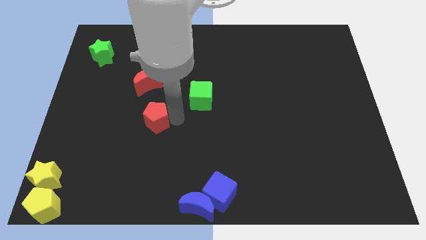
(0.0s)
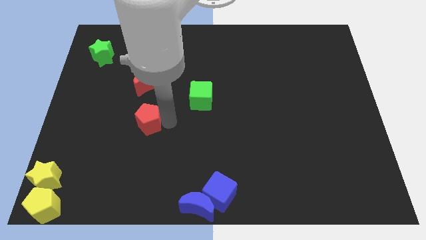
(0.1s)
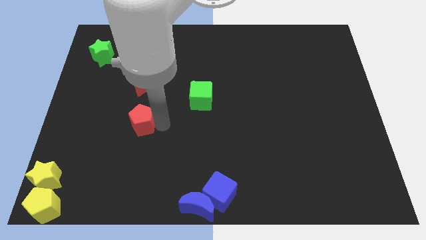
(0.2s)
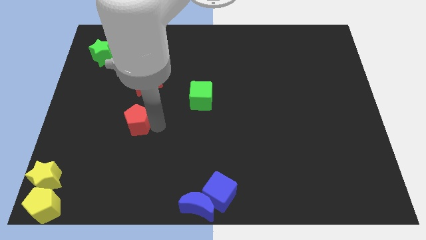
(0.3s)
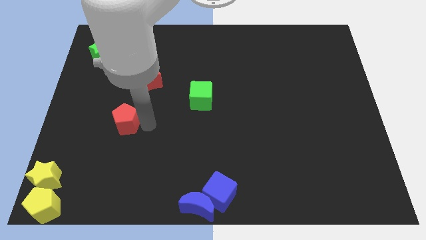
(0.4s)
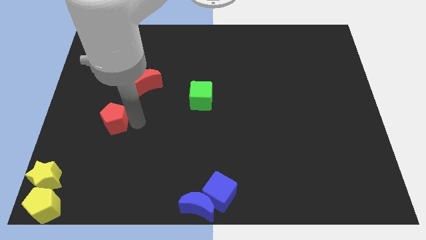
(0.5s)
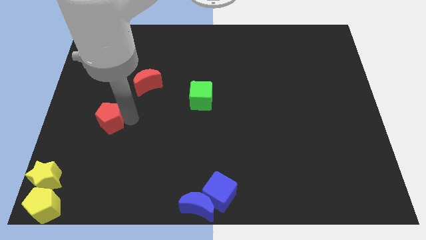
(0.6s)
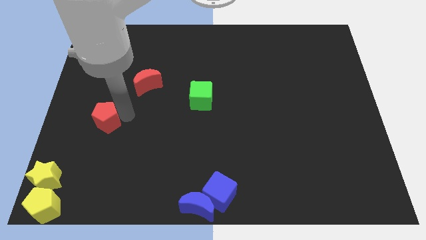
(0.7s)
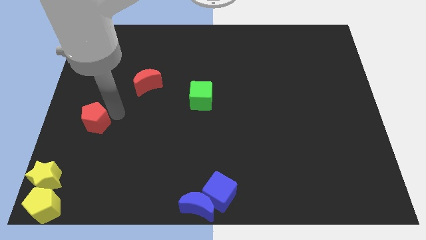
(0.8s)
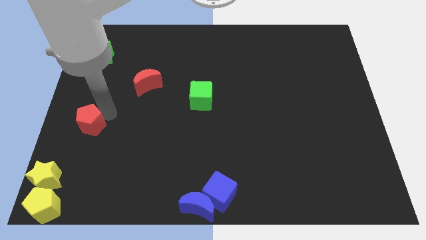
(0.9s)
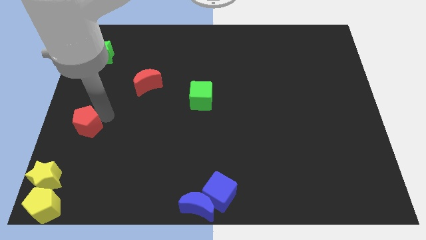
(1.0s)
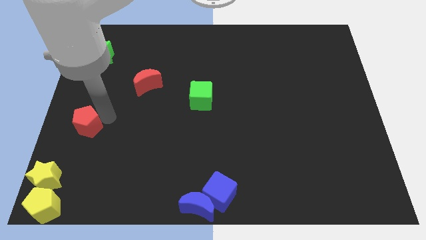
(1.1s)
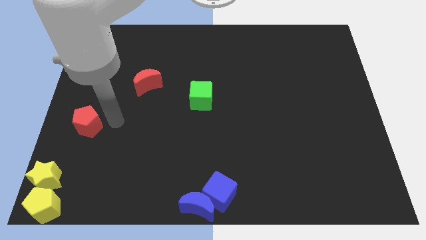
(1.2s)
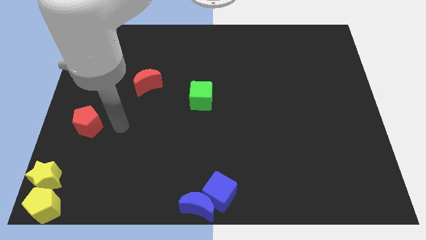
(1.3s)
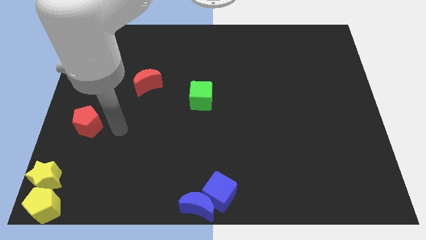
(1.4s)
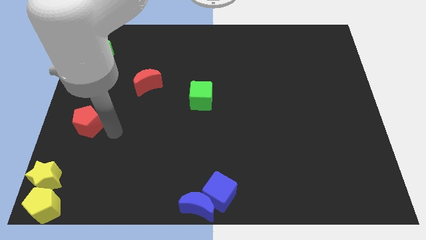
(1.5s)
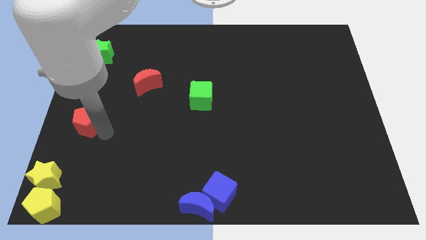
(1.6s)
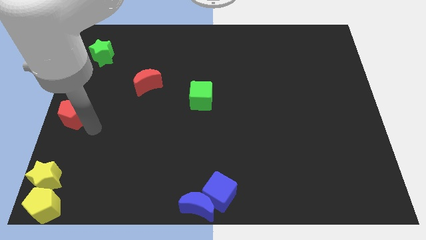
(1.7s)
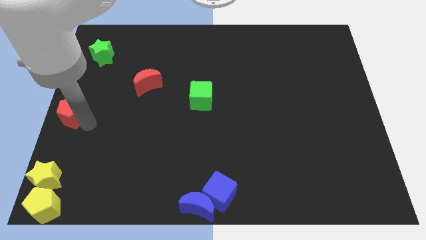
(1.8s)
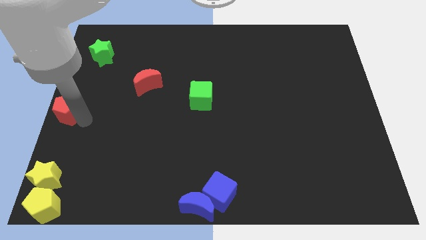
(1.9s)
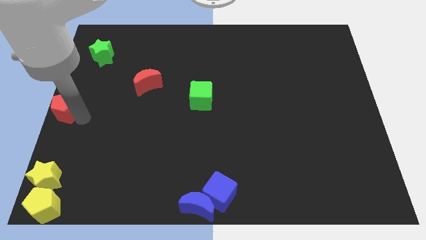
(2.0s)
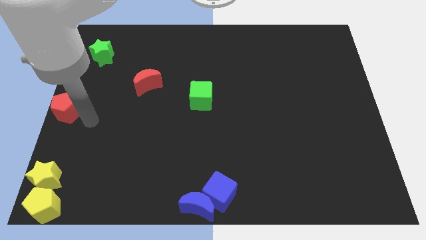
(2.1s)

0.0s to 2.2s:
move the red pentagon to the center left of the board

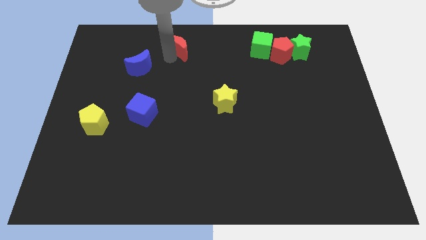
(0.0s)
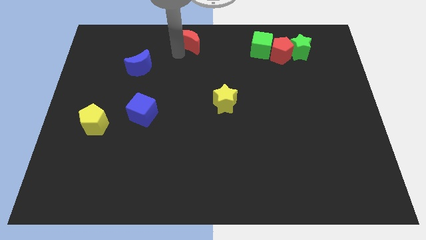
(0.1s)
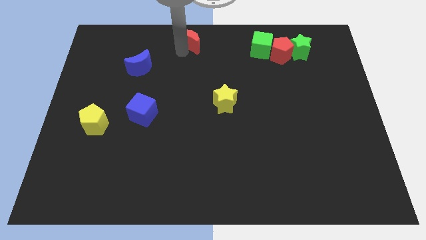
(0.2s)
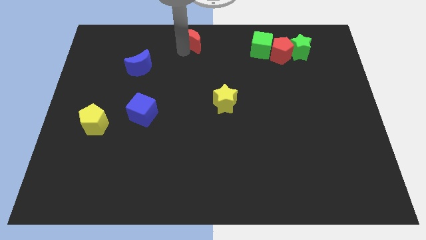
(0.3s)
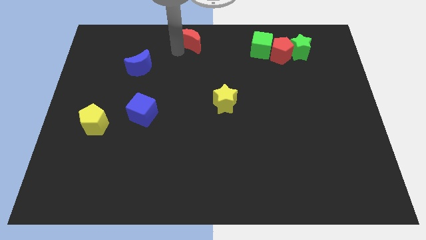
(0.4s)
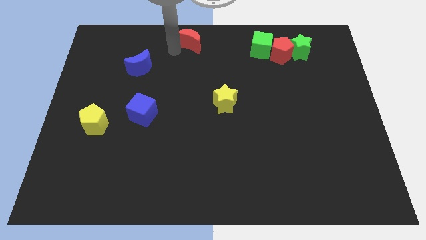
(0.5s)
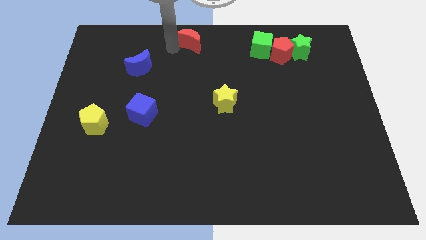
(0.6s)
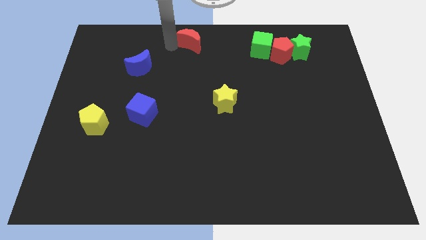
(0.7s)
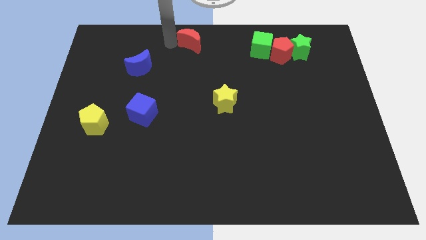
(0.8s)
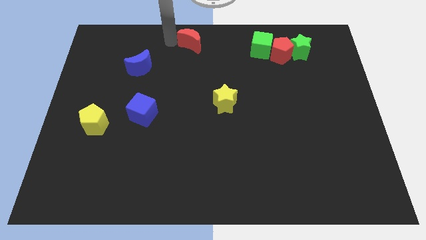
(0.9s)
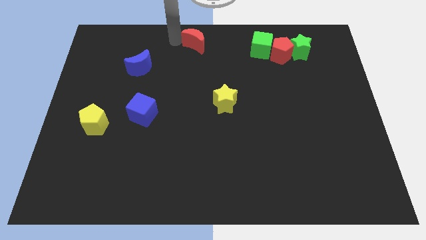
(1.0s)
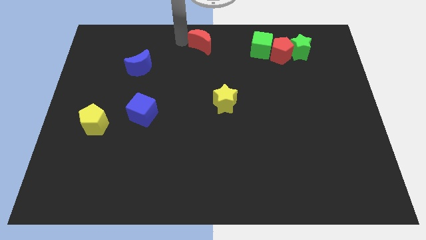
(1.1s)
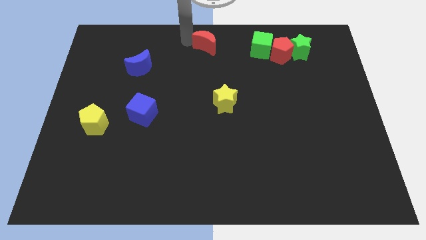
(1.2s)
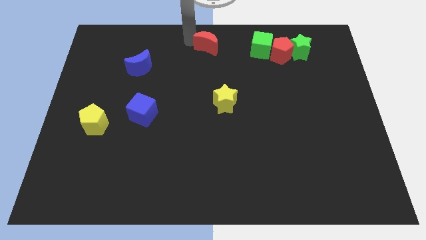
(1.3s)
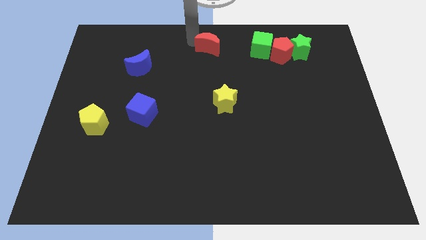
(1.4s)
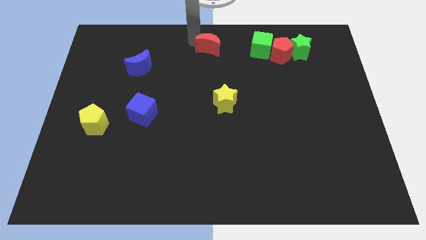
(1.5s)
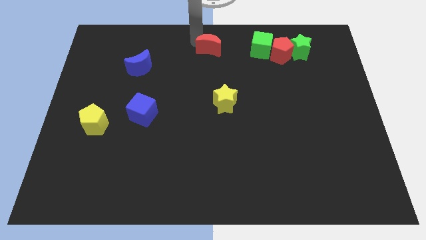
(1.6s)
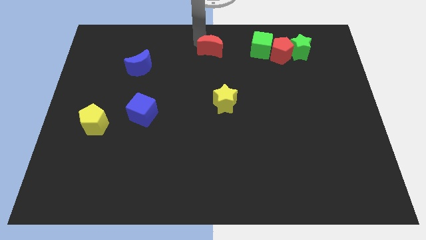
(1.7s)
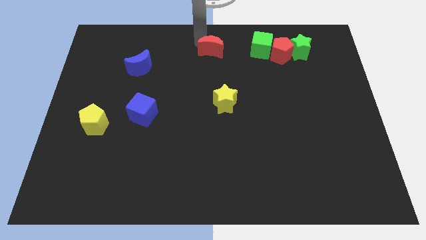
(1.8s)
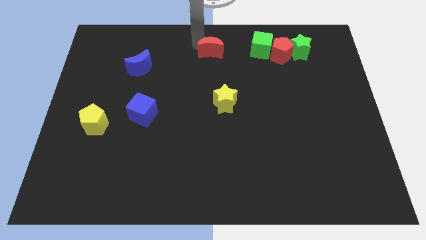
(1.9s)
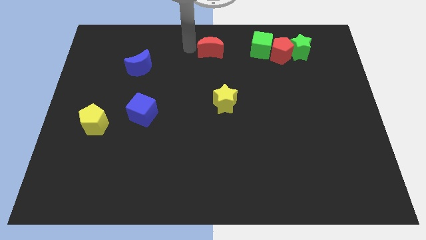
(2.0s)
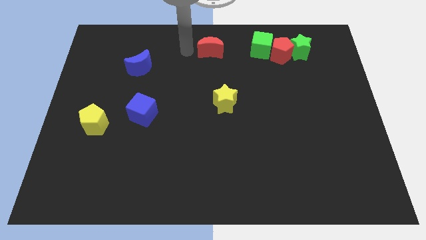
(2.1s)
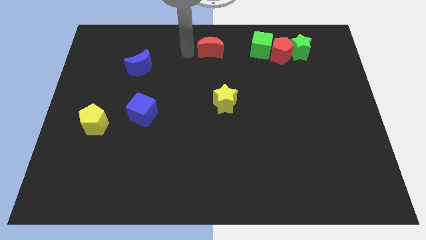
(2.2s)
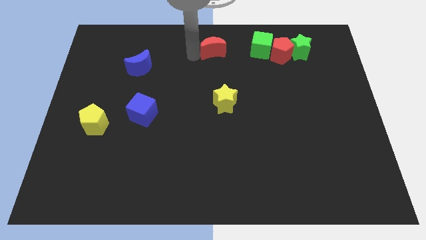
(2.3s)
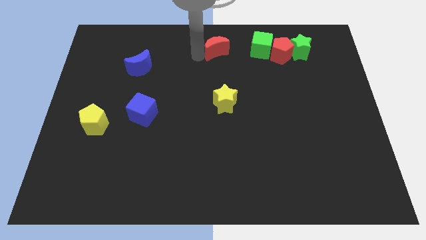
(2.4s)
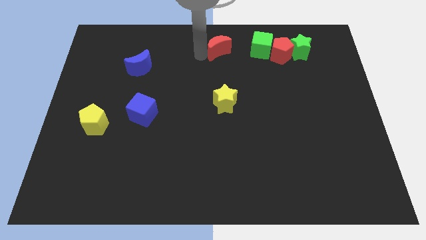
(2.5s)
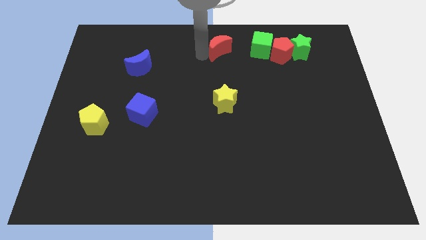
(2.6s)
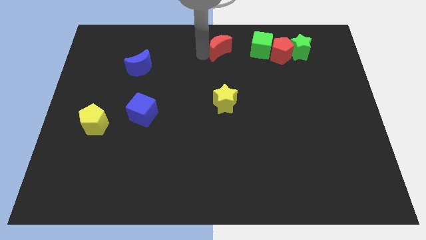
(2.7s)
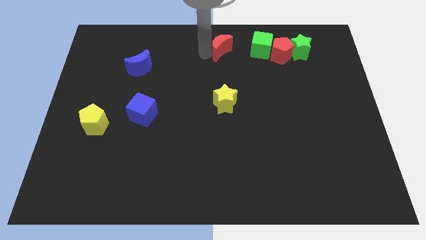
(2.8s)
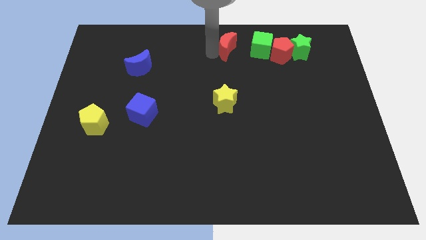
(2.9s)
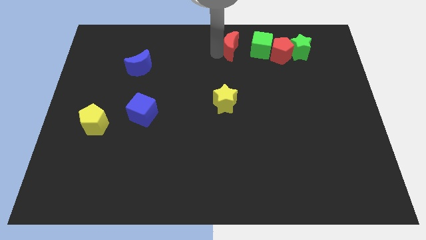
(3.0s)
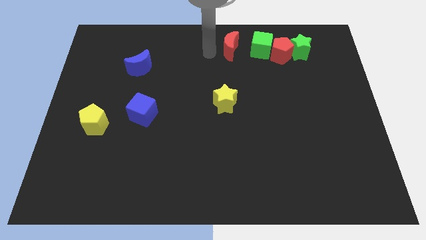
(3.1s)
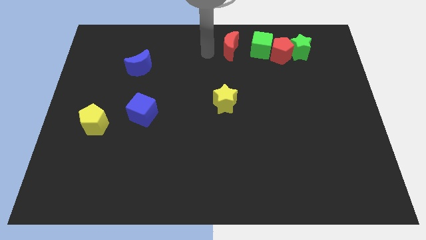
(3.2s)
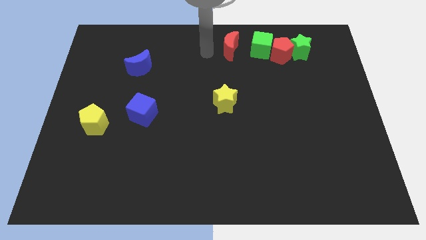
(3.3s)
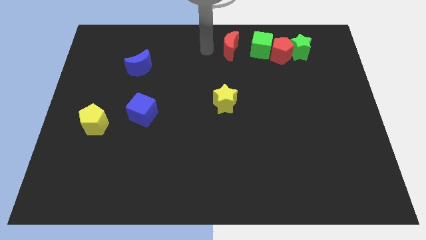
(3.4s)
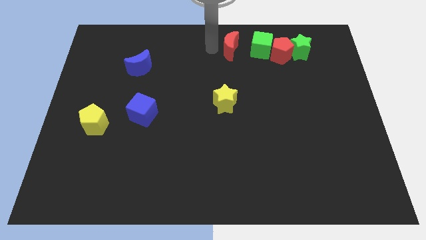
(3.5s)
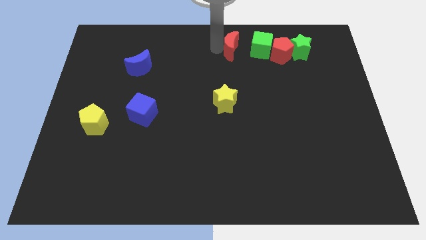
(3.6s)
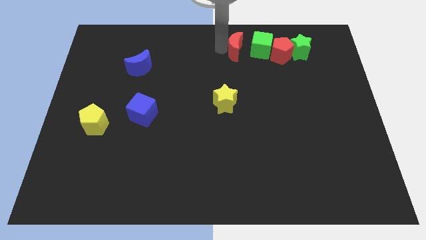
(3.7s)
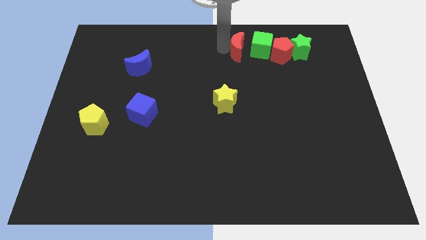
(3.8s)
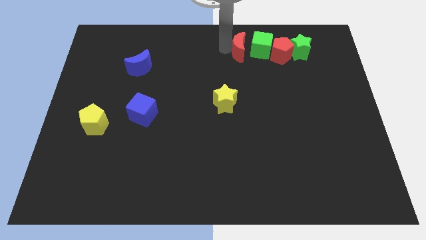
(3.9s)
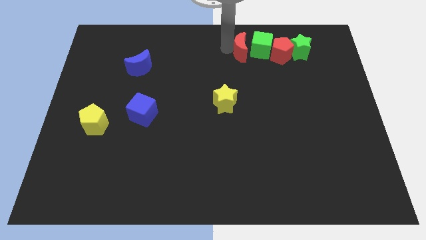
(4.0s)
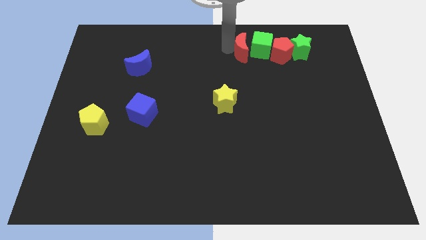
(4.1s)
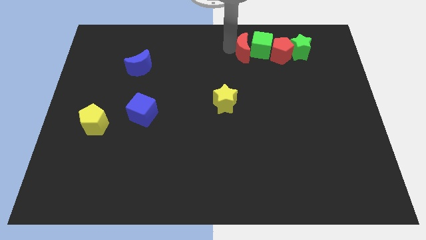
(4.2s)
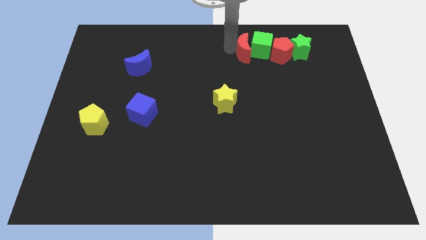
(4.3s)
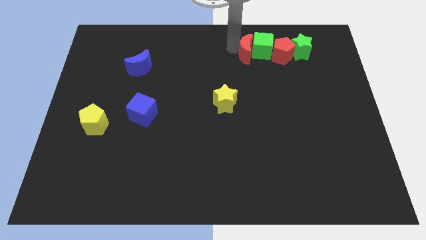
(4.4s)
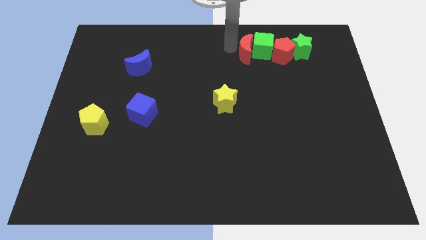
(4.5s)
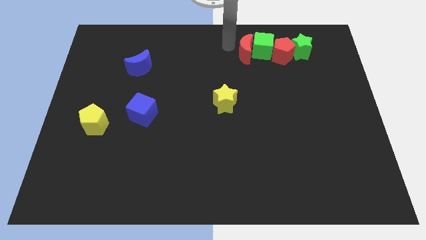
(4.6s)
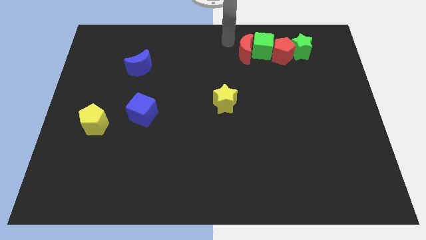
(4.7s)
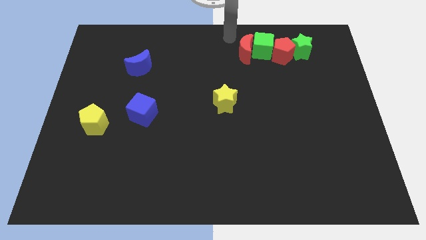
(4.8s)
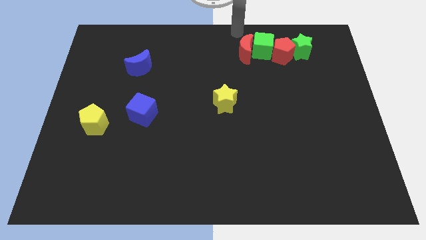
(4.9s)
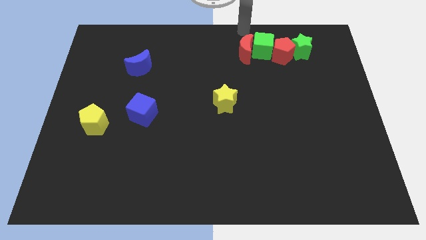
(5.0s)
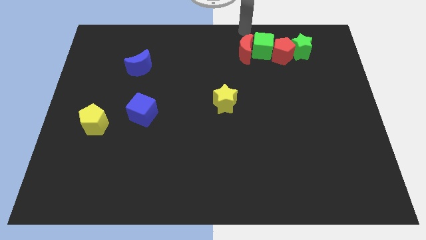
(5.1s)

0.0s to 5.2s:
push the red moon left to the green cube

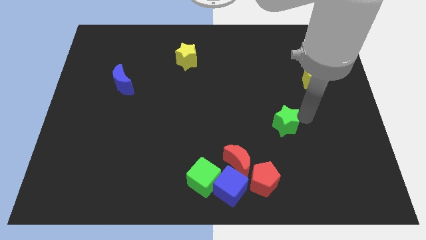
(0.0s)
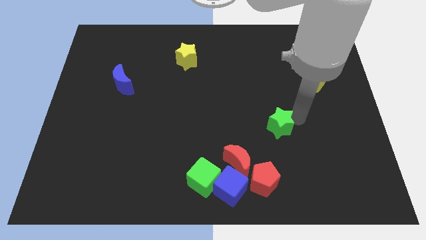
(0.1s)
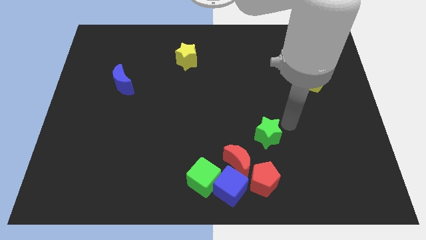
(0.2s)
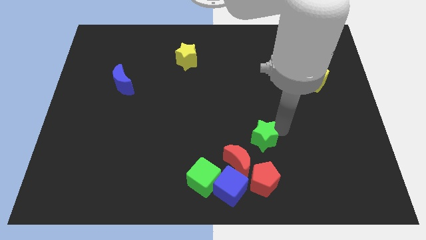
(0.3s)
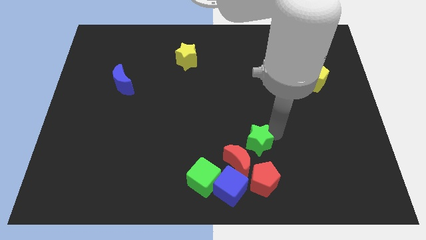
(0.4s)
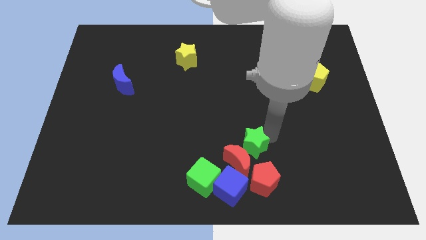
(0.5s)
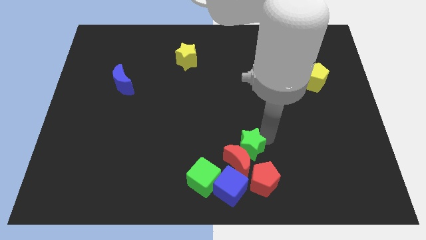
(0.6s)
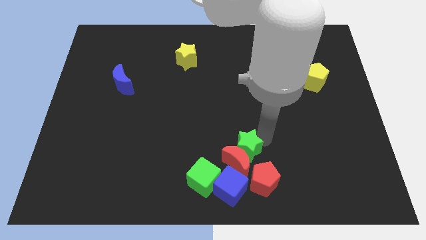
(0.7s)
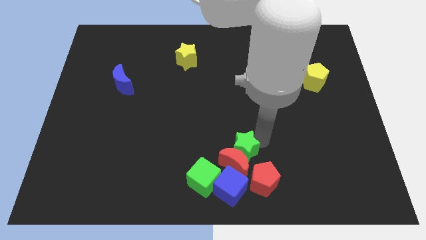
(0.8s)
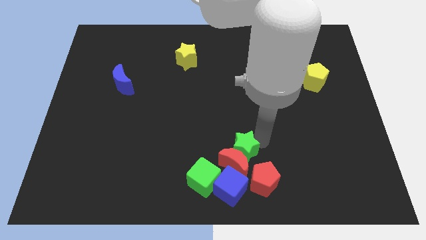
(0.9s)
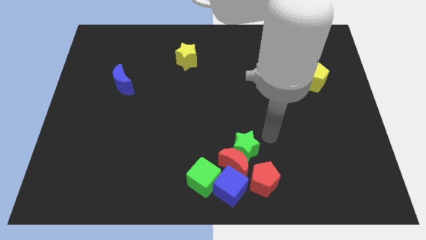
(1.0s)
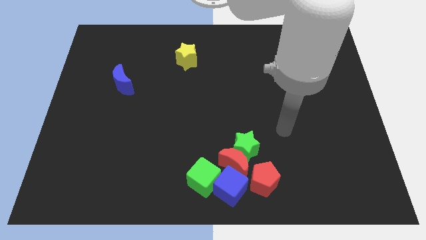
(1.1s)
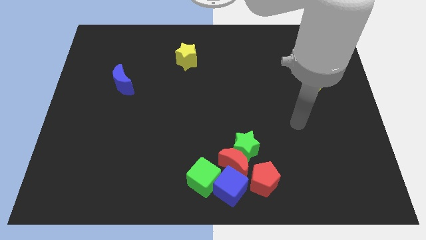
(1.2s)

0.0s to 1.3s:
push the green star above the red crescent

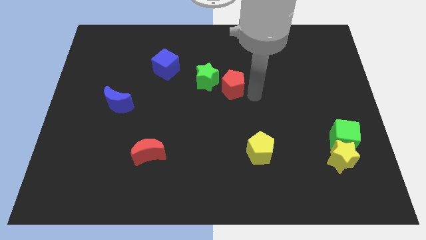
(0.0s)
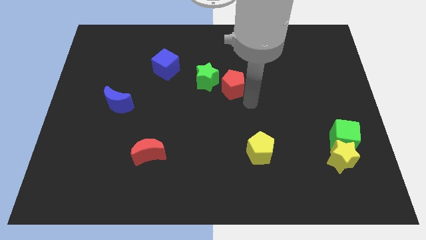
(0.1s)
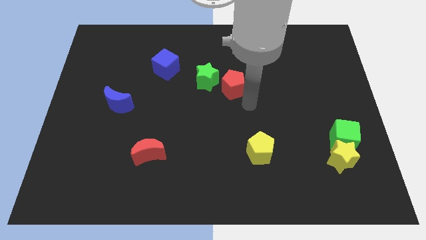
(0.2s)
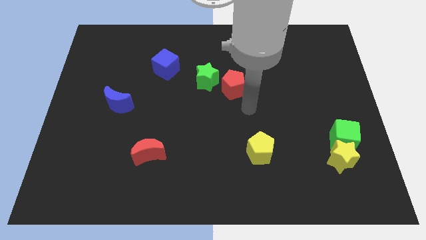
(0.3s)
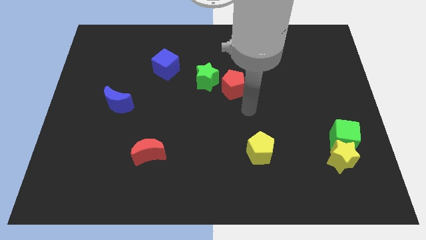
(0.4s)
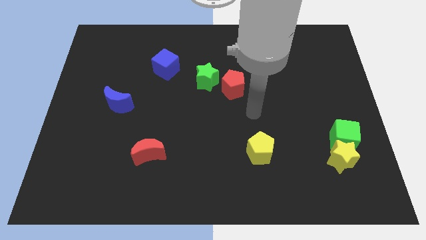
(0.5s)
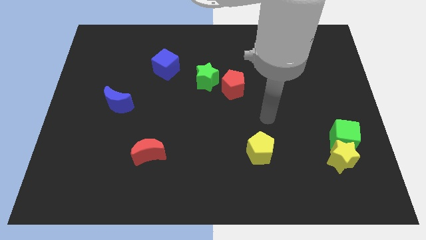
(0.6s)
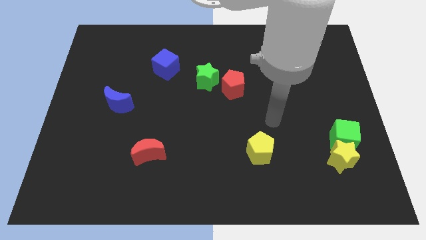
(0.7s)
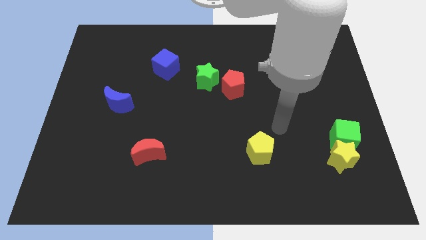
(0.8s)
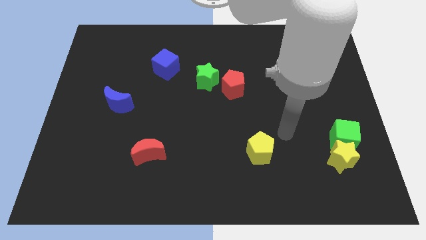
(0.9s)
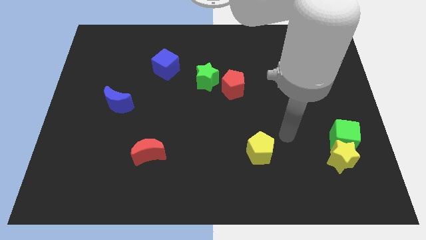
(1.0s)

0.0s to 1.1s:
move the arm to the to the top right of yellow star
